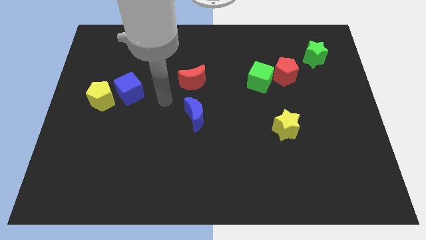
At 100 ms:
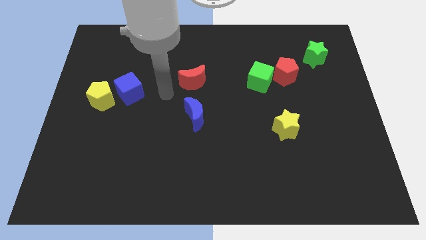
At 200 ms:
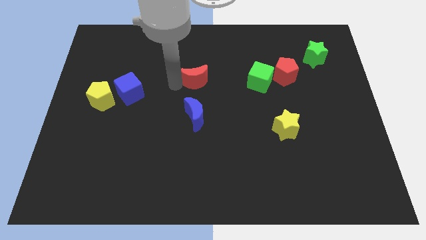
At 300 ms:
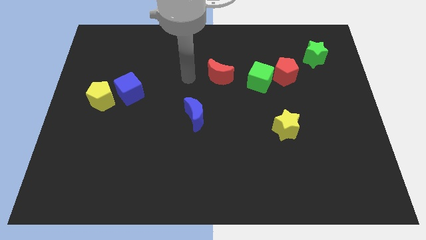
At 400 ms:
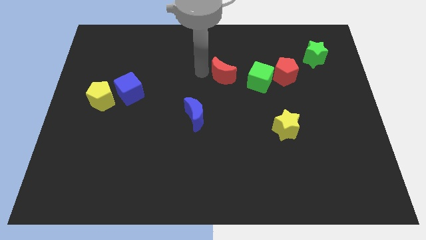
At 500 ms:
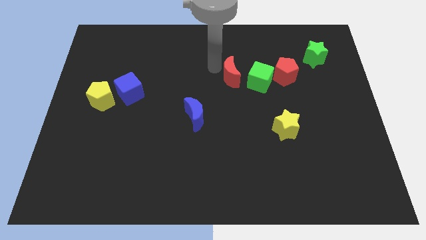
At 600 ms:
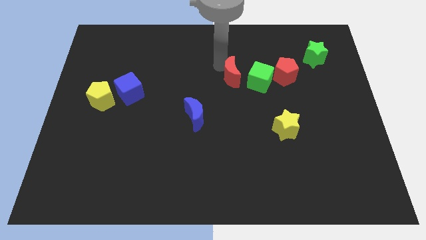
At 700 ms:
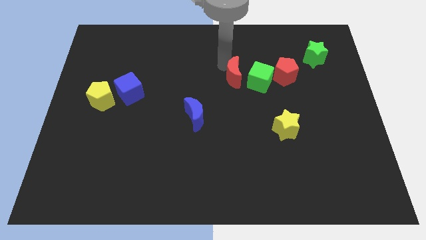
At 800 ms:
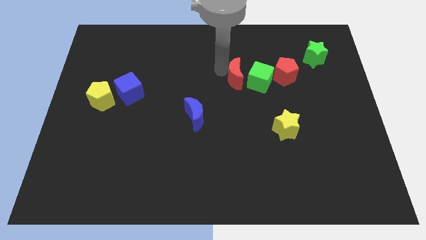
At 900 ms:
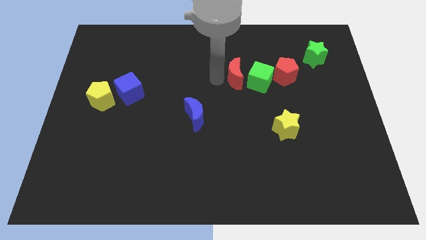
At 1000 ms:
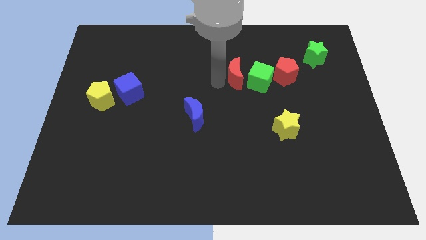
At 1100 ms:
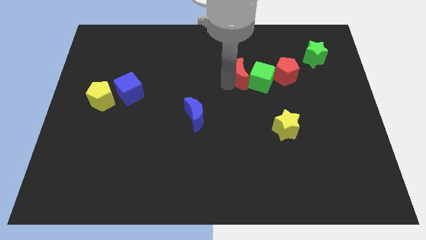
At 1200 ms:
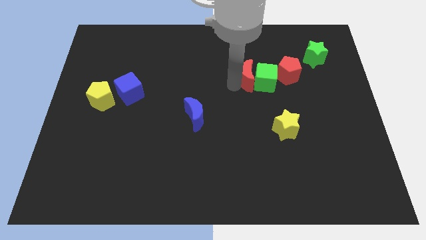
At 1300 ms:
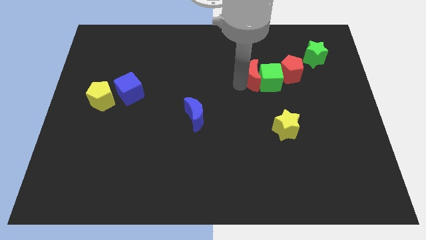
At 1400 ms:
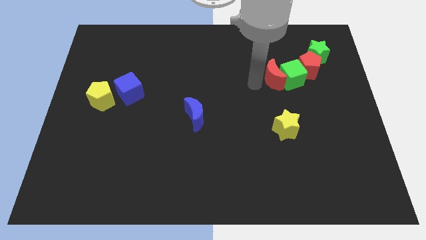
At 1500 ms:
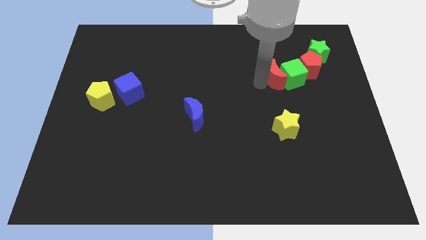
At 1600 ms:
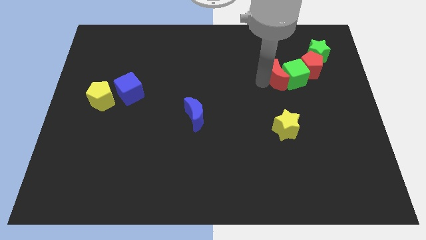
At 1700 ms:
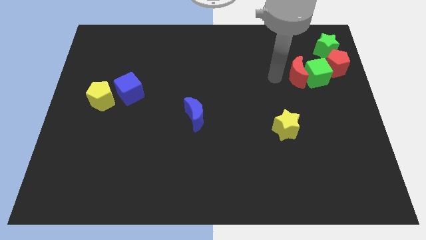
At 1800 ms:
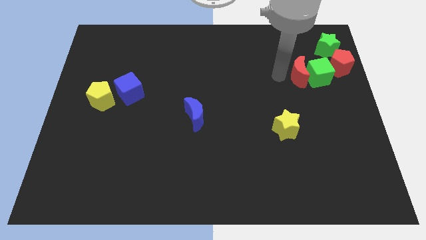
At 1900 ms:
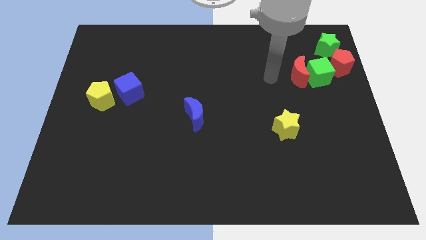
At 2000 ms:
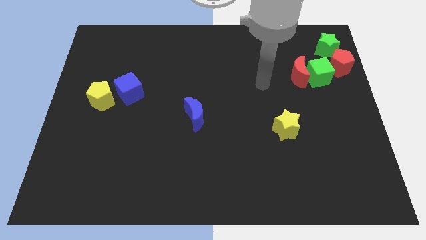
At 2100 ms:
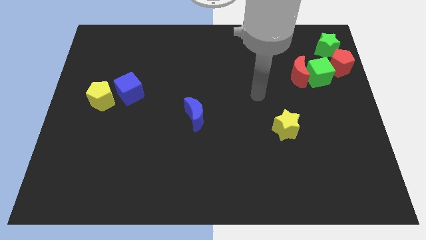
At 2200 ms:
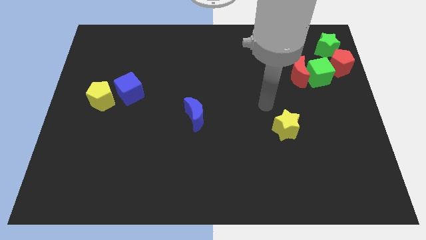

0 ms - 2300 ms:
push the red moon into green cube

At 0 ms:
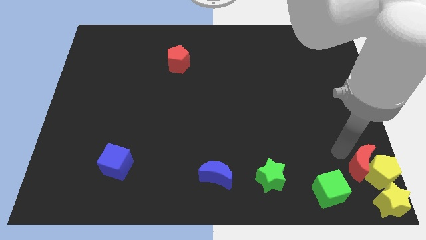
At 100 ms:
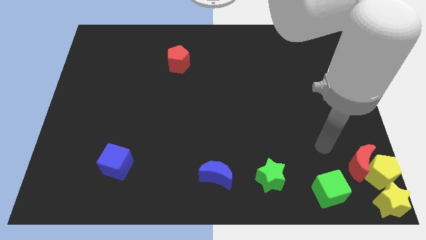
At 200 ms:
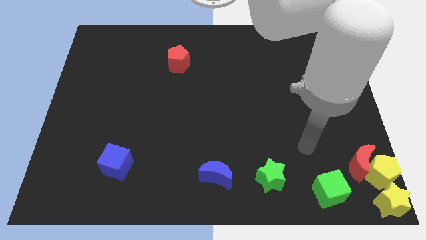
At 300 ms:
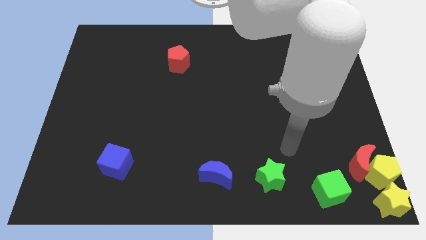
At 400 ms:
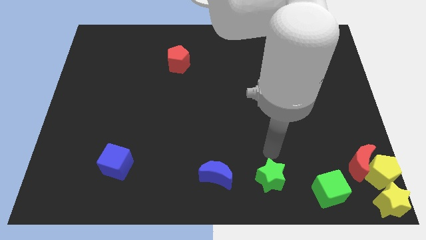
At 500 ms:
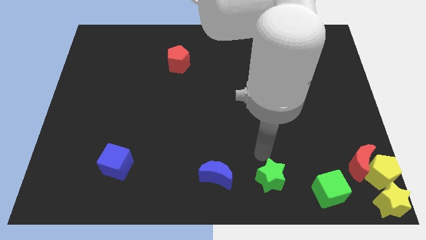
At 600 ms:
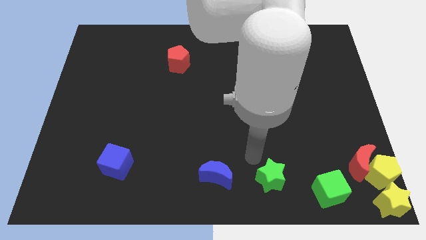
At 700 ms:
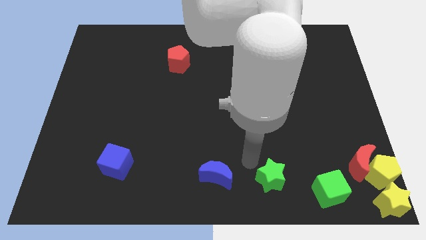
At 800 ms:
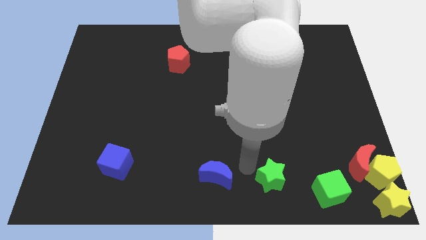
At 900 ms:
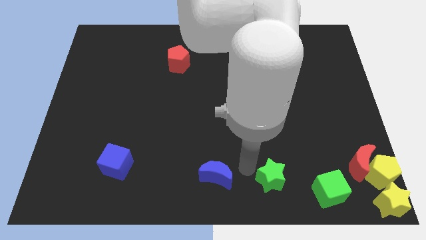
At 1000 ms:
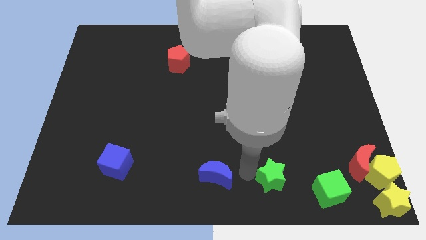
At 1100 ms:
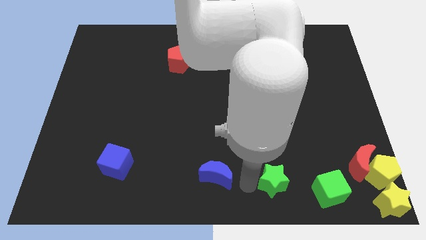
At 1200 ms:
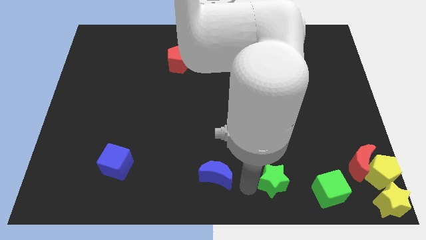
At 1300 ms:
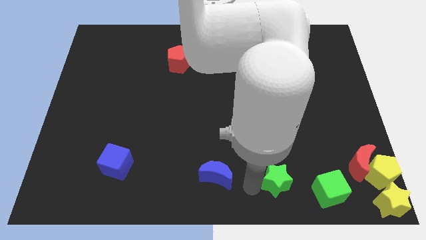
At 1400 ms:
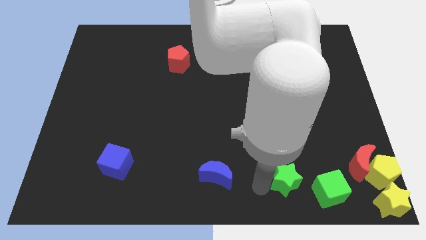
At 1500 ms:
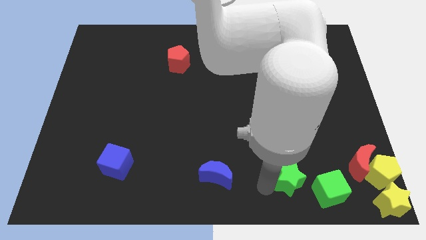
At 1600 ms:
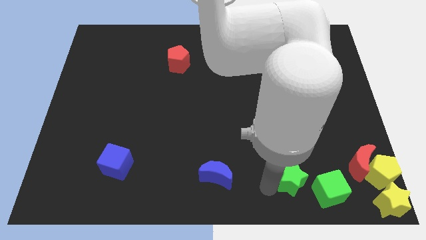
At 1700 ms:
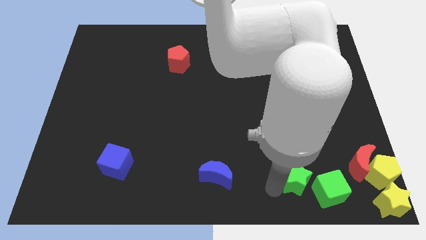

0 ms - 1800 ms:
move the green star slightly to the right

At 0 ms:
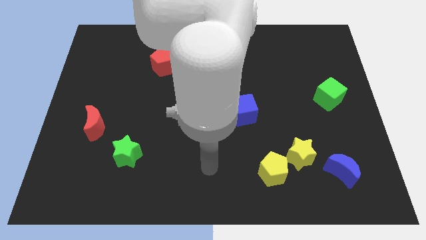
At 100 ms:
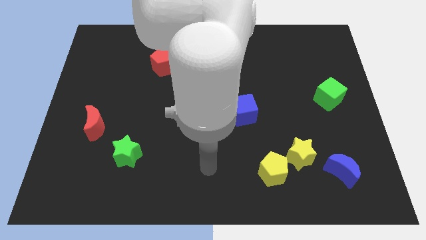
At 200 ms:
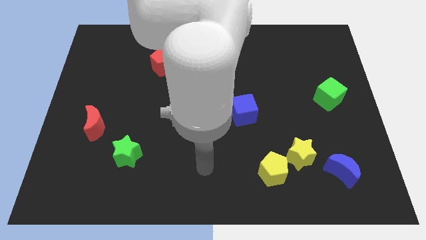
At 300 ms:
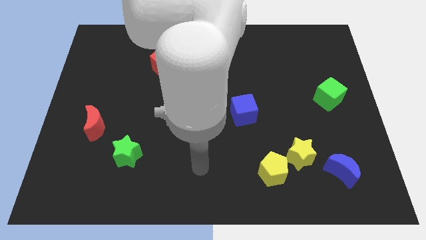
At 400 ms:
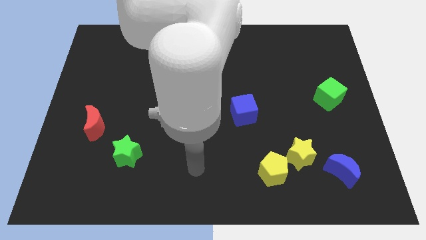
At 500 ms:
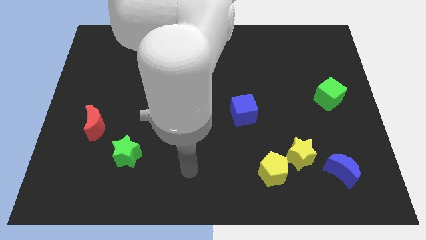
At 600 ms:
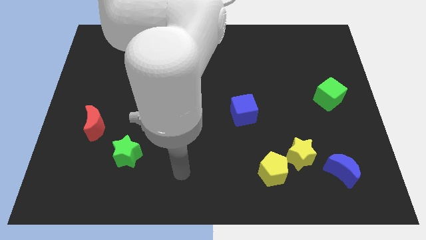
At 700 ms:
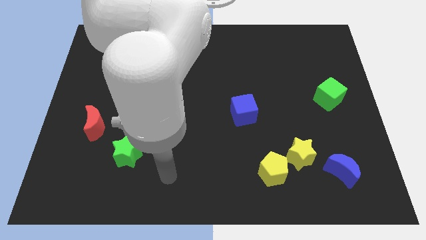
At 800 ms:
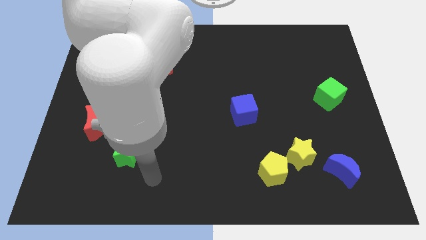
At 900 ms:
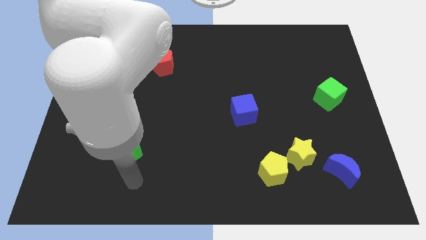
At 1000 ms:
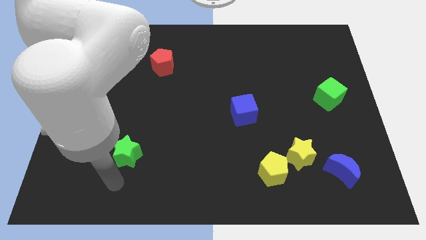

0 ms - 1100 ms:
put your arm vertically below the green star

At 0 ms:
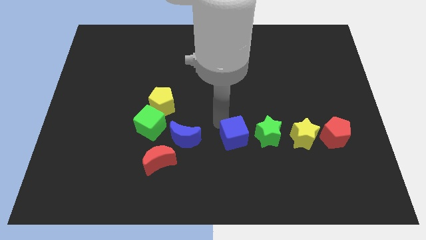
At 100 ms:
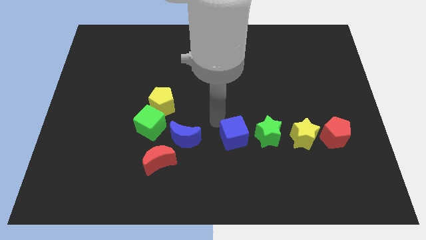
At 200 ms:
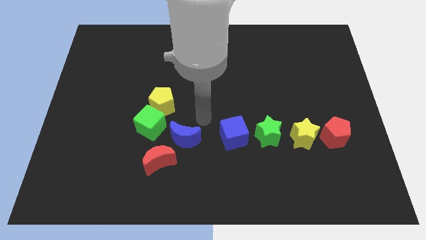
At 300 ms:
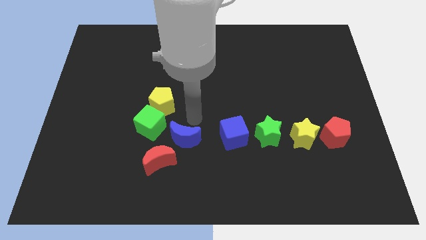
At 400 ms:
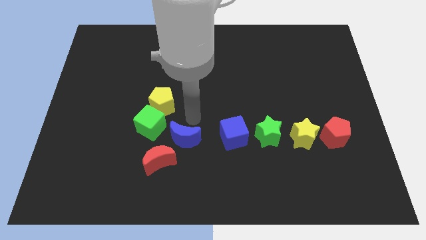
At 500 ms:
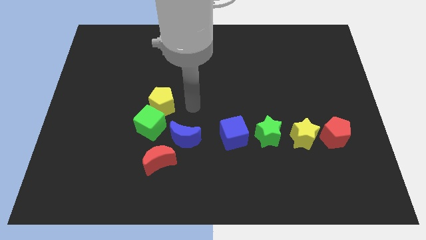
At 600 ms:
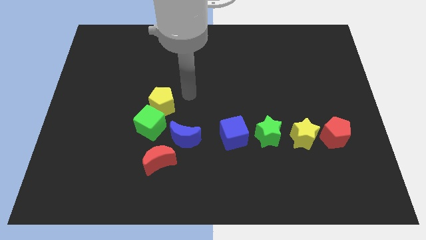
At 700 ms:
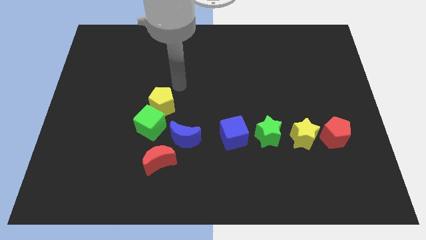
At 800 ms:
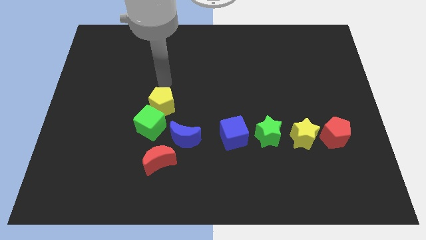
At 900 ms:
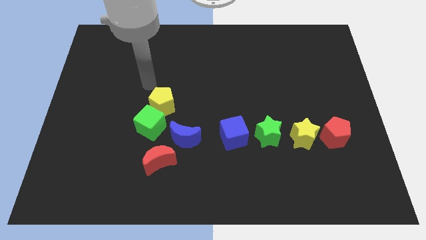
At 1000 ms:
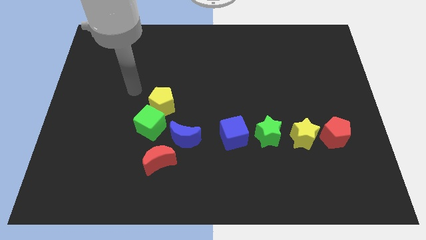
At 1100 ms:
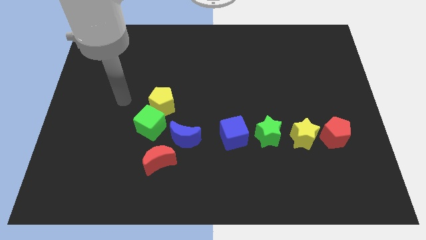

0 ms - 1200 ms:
move your arm from blue cube towards yellow pentagon

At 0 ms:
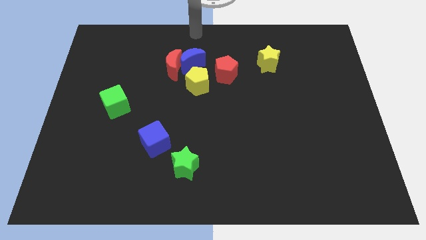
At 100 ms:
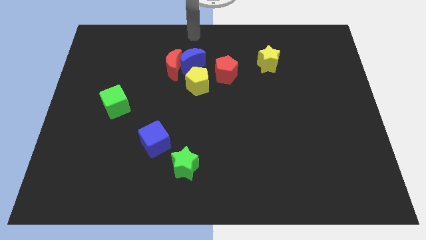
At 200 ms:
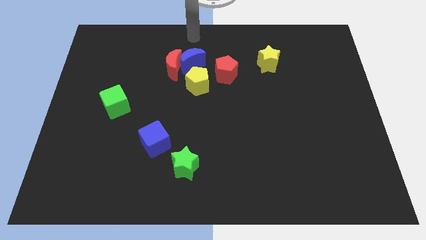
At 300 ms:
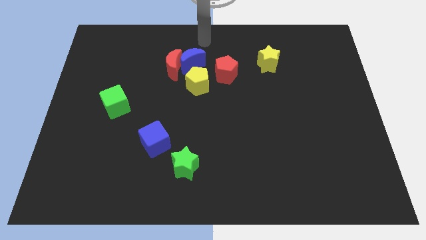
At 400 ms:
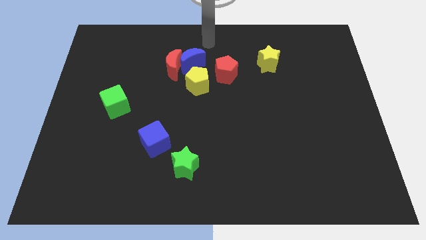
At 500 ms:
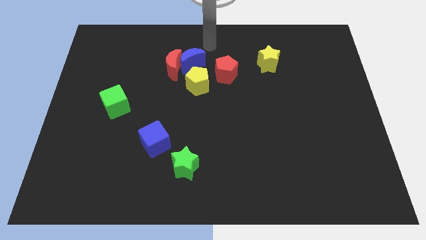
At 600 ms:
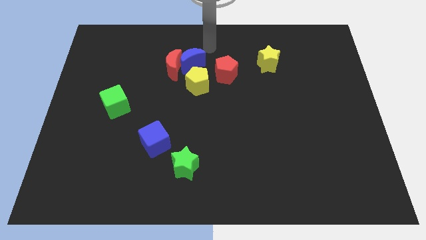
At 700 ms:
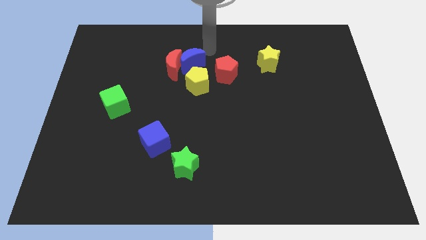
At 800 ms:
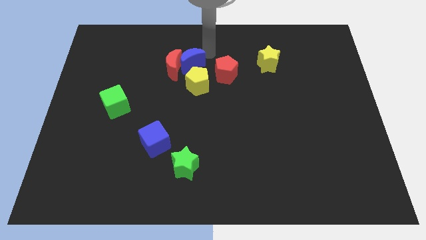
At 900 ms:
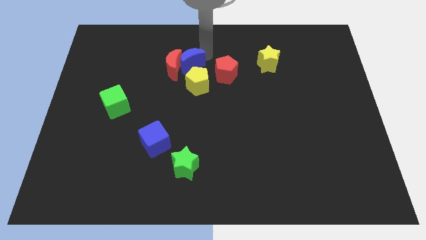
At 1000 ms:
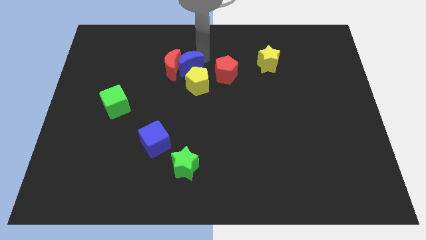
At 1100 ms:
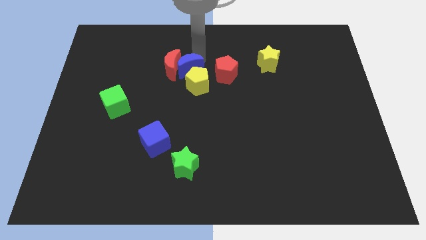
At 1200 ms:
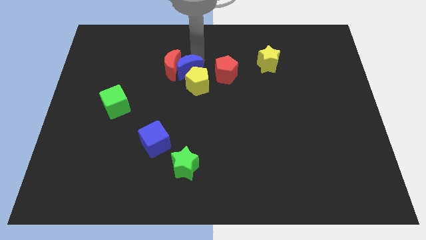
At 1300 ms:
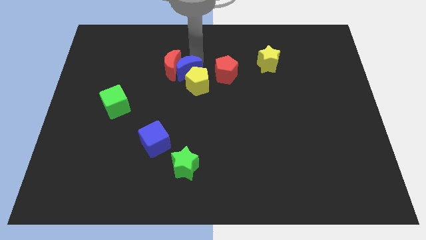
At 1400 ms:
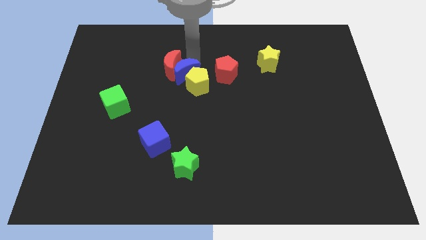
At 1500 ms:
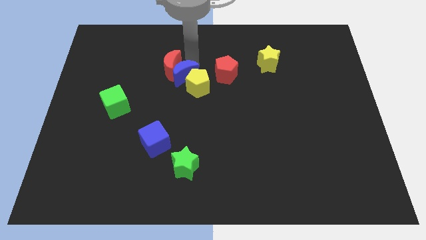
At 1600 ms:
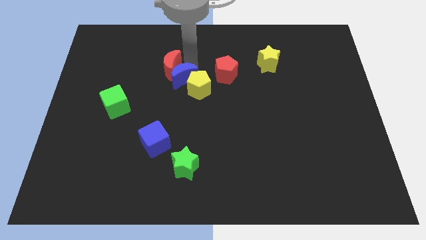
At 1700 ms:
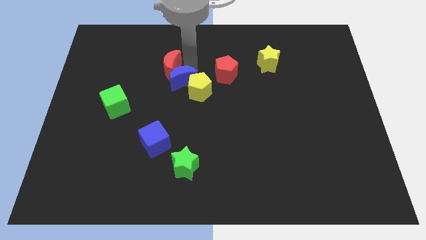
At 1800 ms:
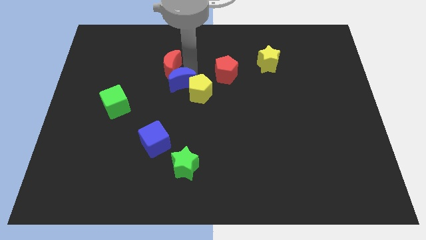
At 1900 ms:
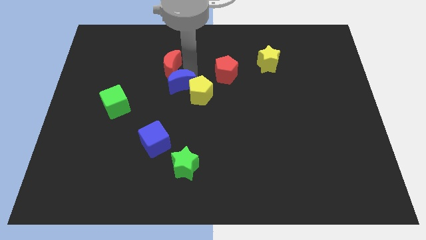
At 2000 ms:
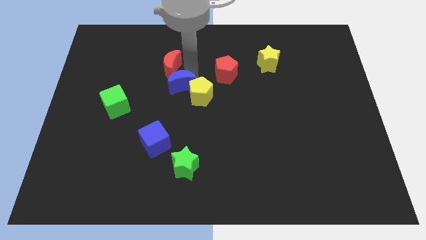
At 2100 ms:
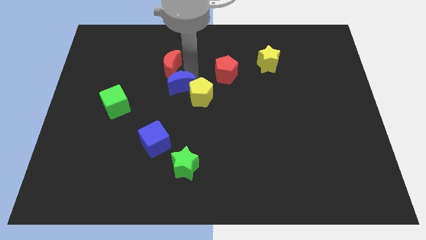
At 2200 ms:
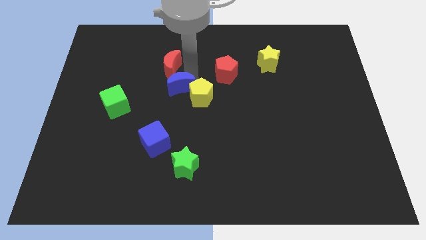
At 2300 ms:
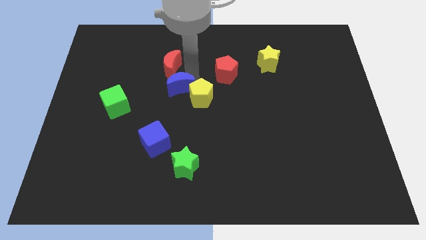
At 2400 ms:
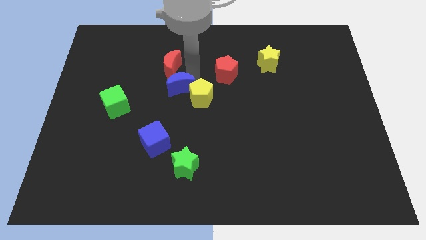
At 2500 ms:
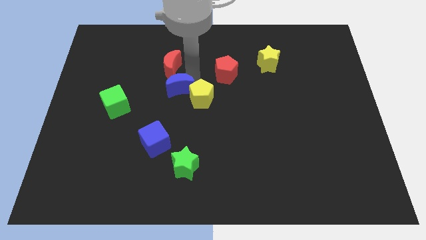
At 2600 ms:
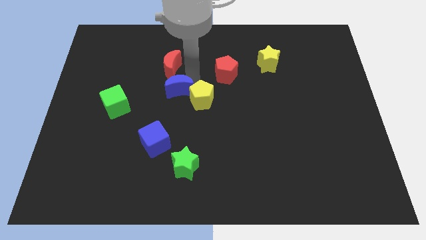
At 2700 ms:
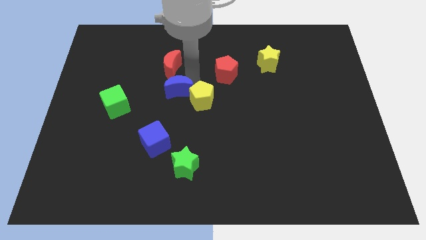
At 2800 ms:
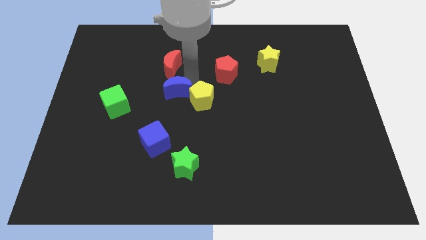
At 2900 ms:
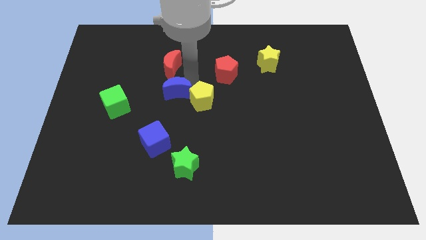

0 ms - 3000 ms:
push the blue moon into the red pentagon
